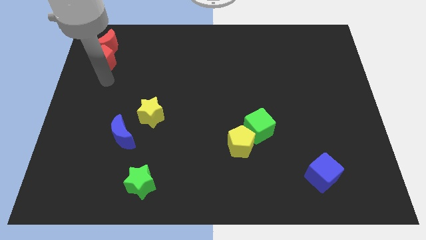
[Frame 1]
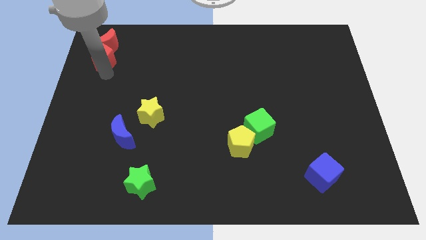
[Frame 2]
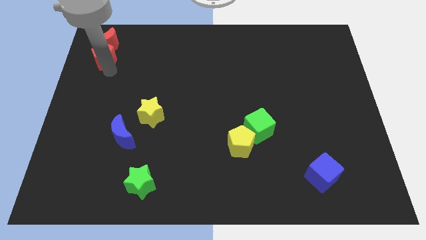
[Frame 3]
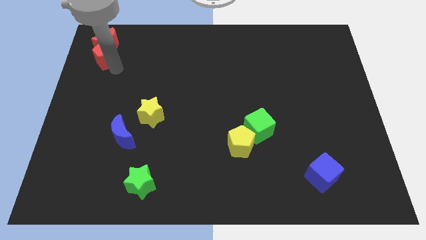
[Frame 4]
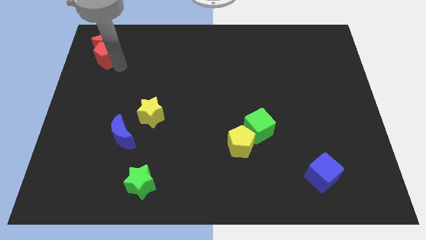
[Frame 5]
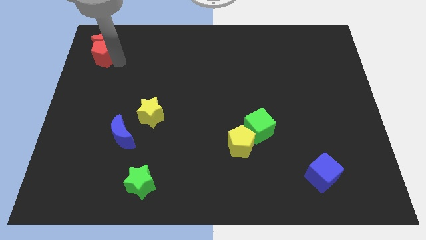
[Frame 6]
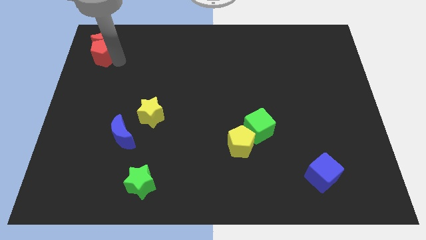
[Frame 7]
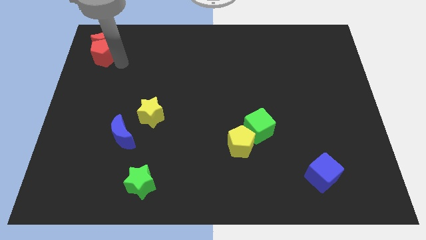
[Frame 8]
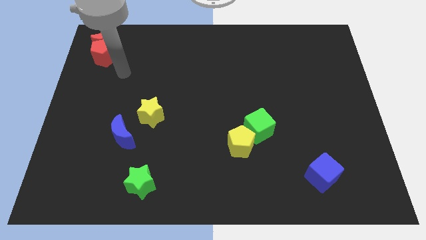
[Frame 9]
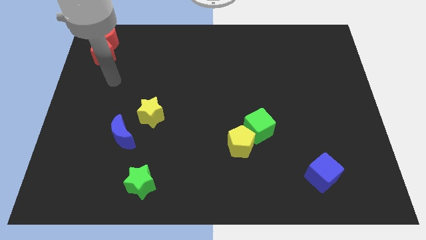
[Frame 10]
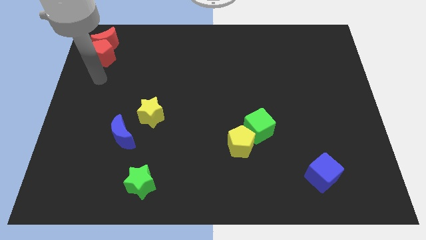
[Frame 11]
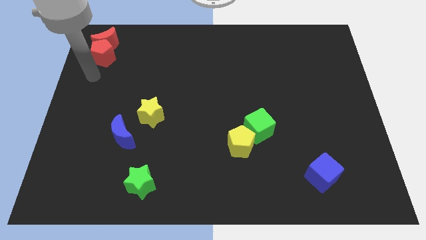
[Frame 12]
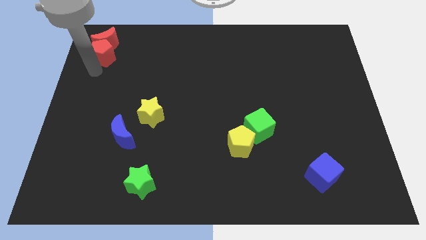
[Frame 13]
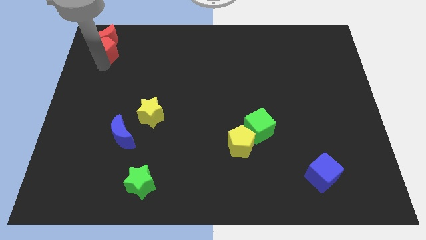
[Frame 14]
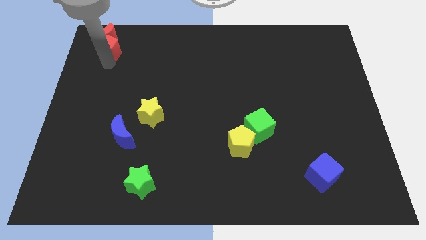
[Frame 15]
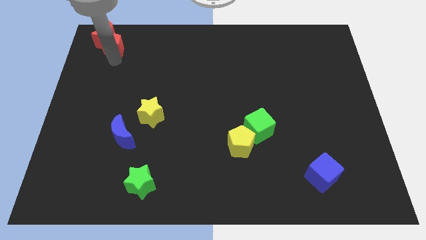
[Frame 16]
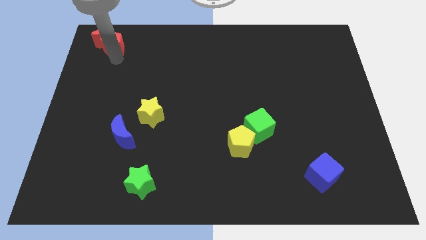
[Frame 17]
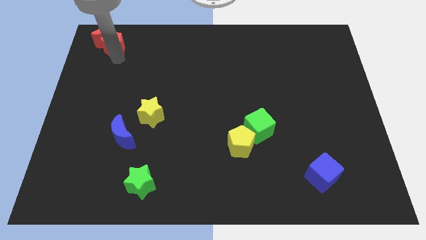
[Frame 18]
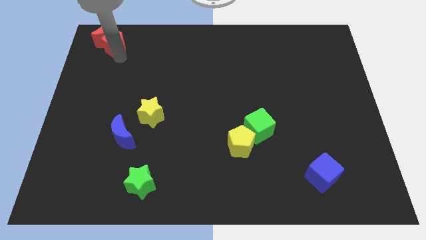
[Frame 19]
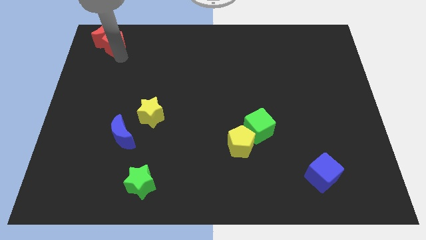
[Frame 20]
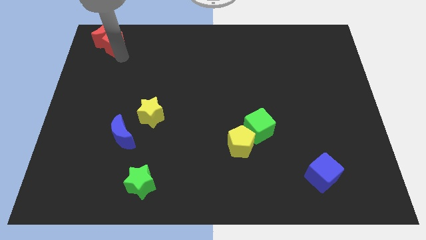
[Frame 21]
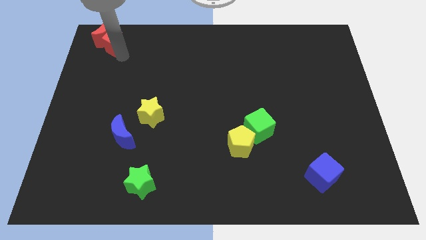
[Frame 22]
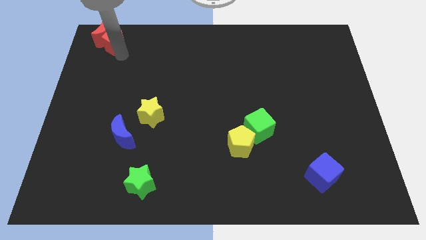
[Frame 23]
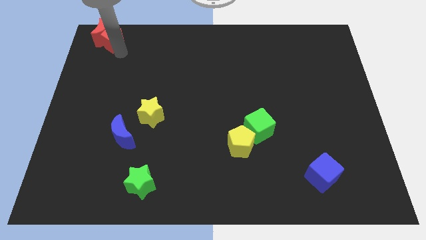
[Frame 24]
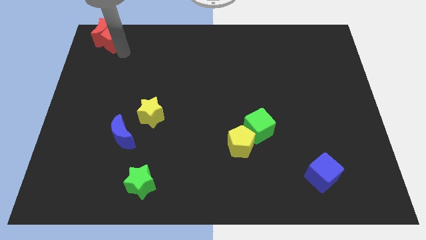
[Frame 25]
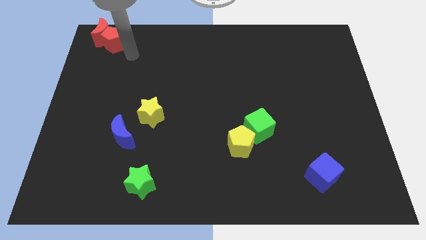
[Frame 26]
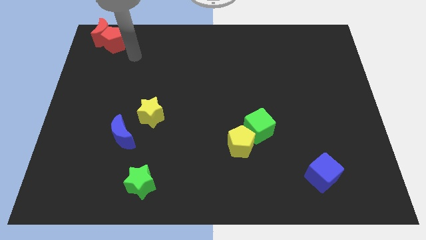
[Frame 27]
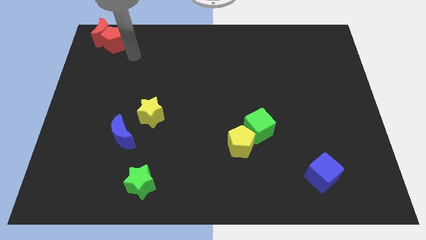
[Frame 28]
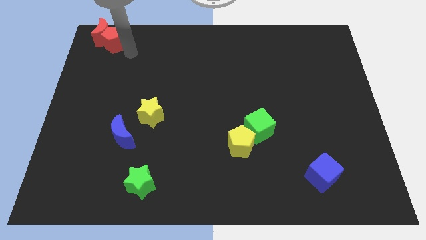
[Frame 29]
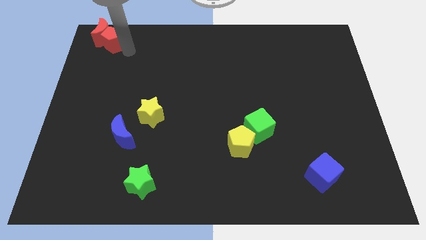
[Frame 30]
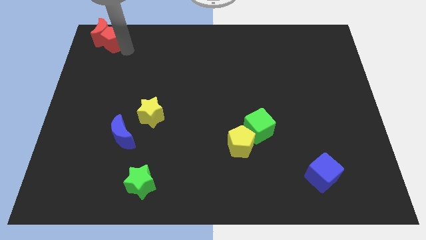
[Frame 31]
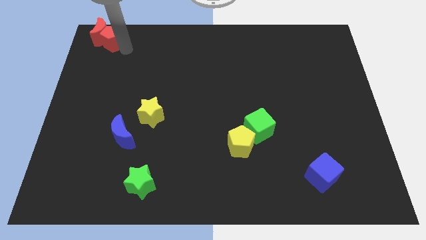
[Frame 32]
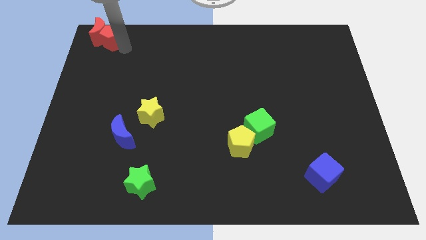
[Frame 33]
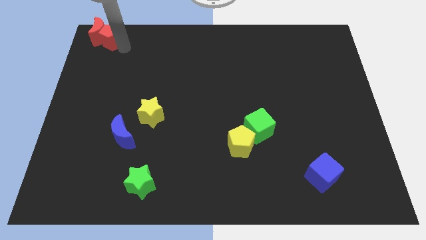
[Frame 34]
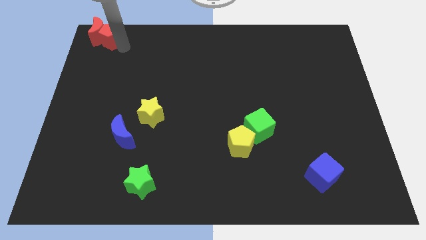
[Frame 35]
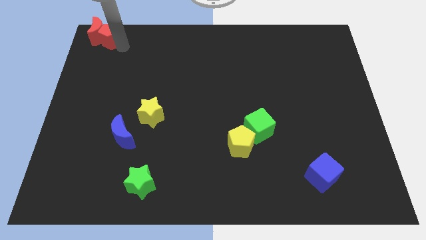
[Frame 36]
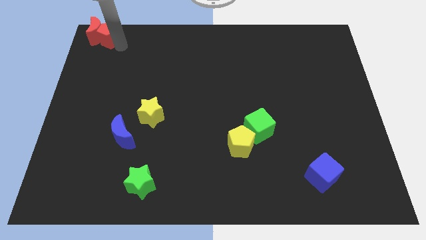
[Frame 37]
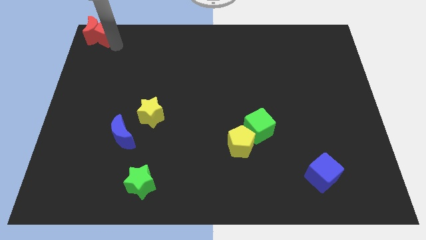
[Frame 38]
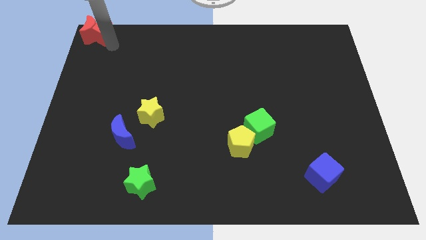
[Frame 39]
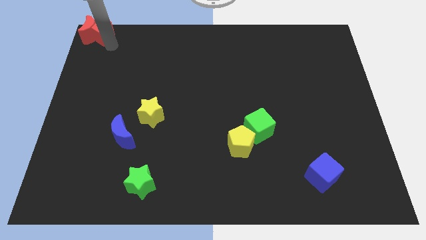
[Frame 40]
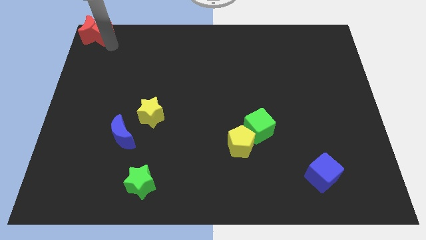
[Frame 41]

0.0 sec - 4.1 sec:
place the red blocks at the top left corner

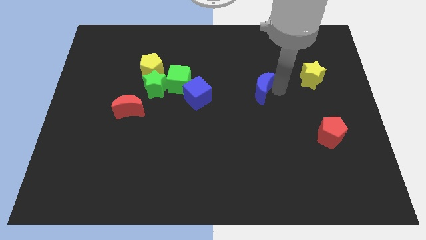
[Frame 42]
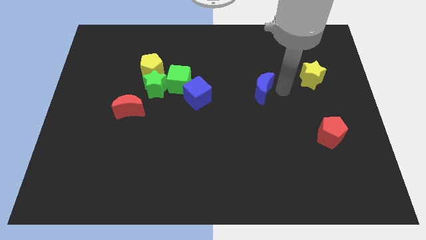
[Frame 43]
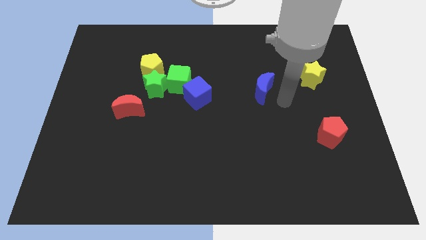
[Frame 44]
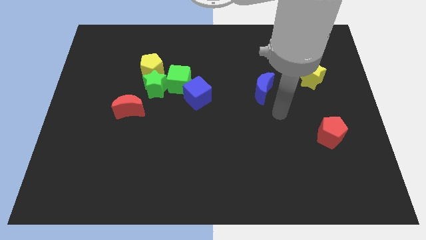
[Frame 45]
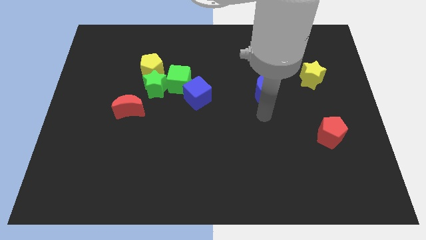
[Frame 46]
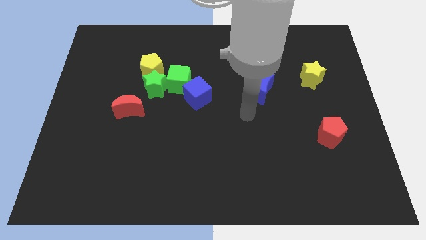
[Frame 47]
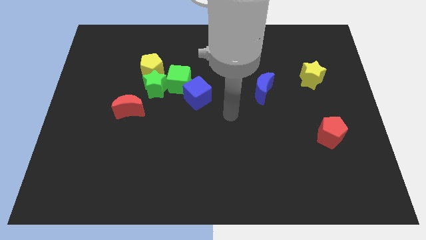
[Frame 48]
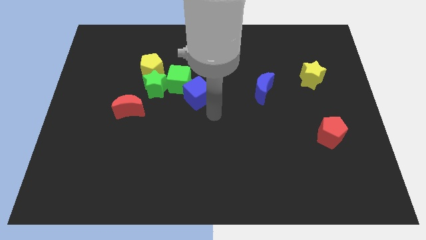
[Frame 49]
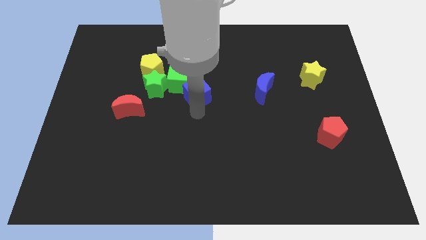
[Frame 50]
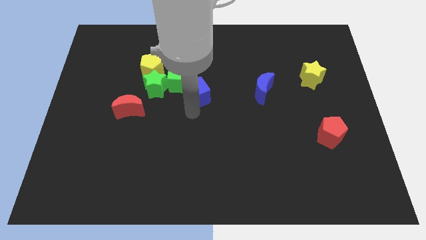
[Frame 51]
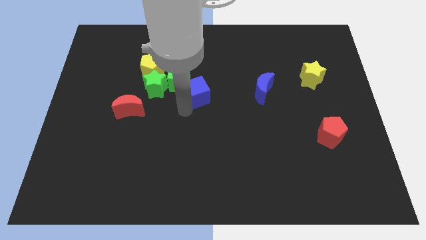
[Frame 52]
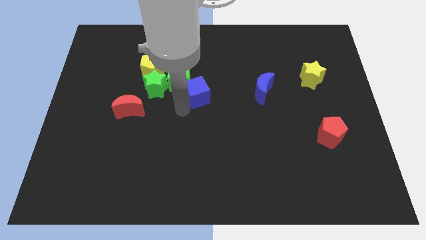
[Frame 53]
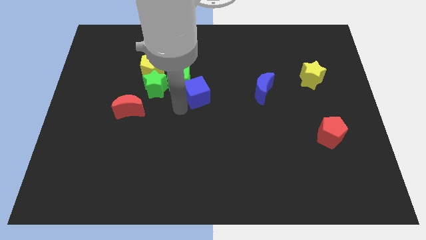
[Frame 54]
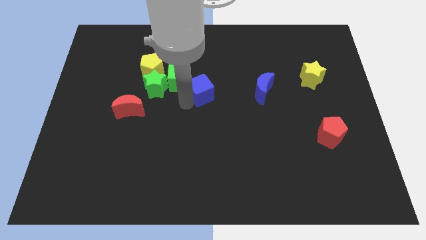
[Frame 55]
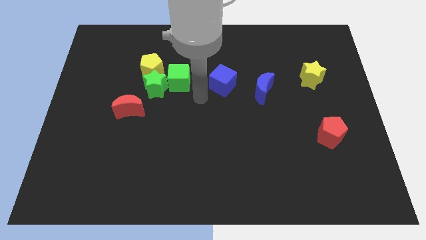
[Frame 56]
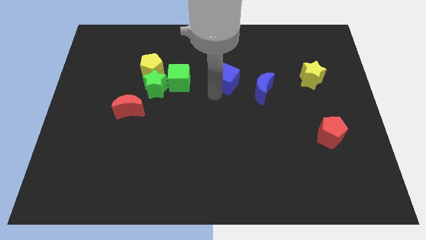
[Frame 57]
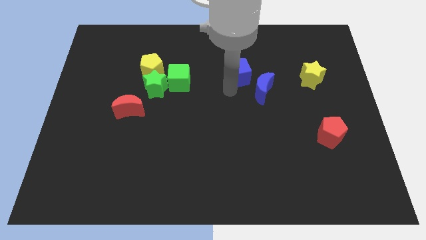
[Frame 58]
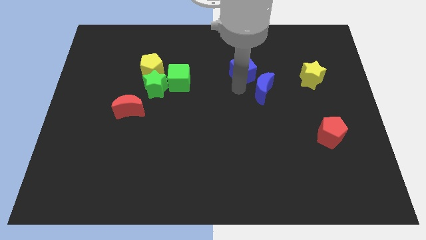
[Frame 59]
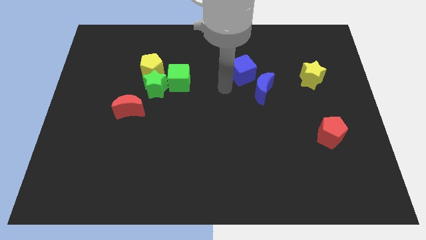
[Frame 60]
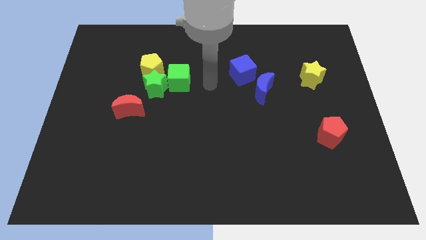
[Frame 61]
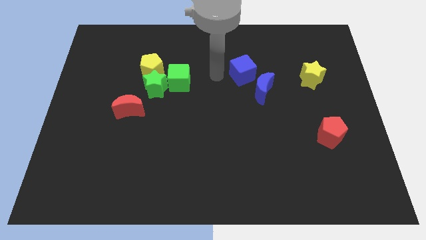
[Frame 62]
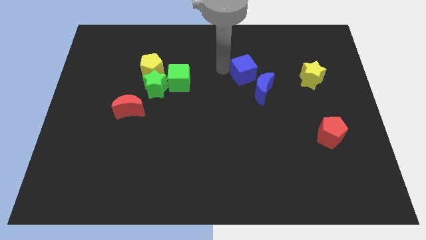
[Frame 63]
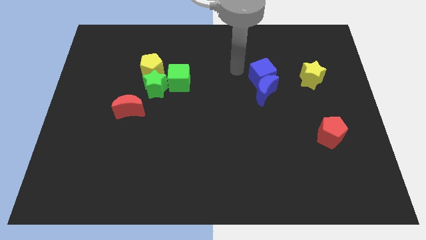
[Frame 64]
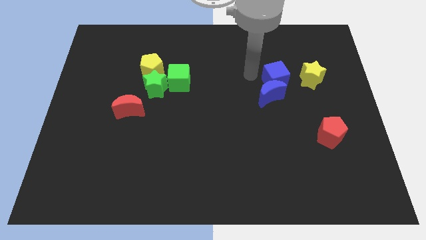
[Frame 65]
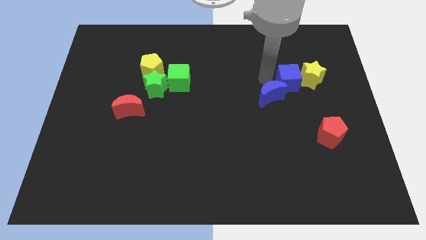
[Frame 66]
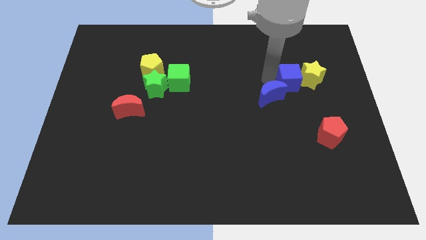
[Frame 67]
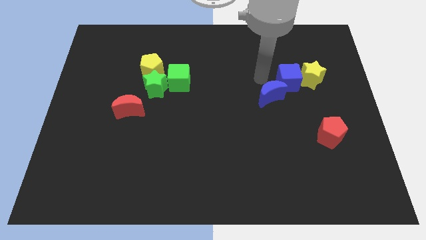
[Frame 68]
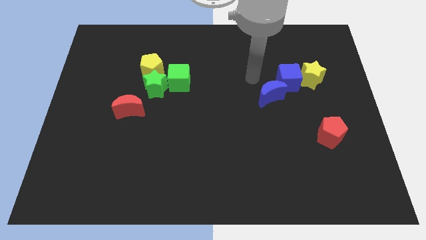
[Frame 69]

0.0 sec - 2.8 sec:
put the blue cube in between the yellow star and blue moon

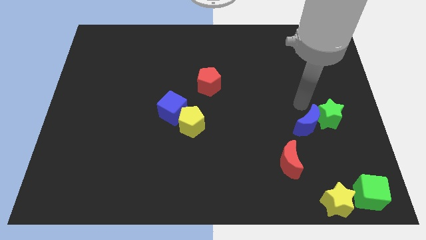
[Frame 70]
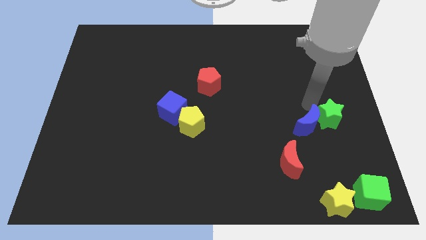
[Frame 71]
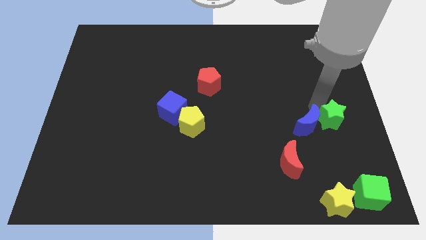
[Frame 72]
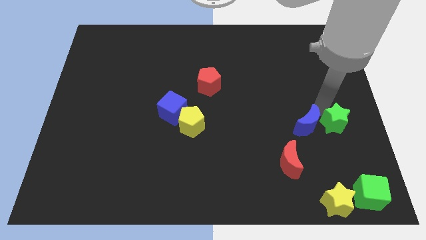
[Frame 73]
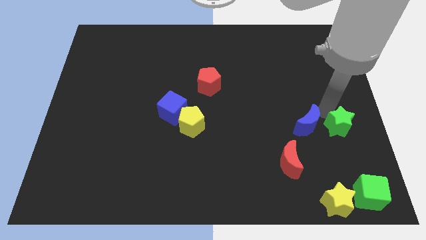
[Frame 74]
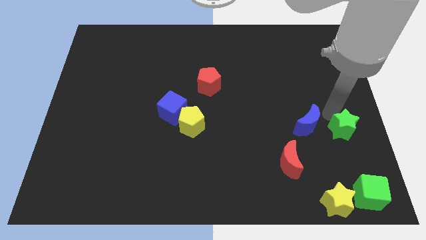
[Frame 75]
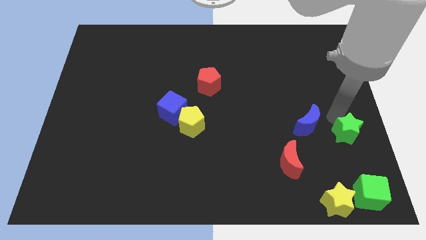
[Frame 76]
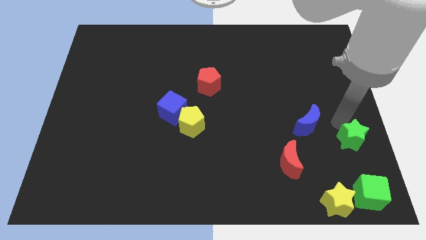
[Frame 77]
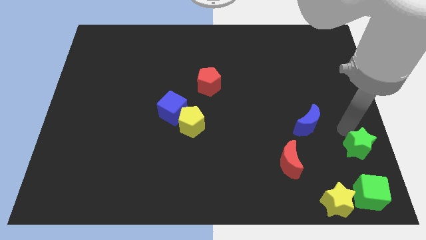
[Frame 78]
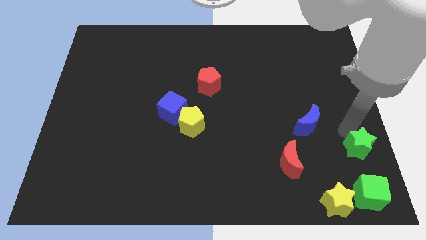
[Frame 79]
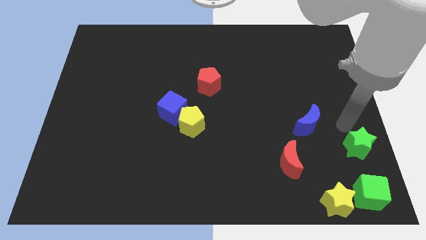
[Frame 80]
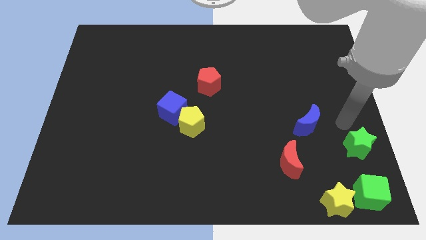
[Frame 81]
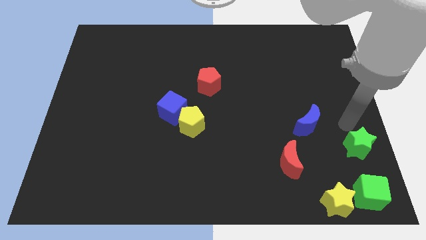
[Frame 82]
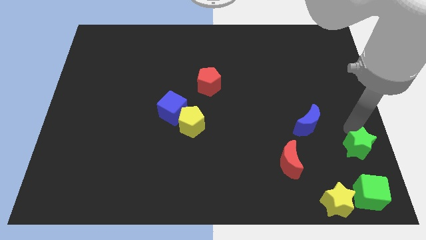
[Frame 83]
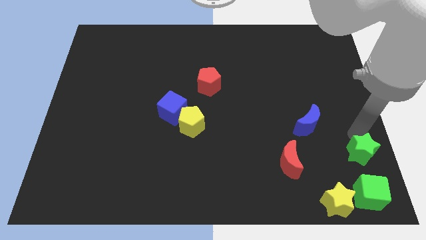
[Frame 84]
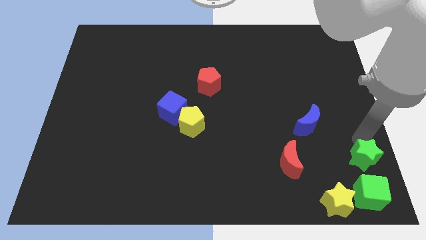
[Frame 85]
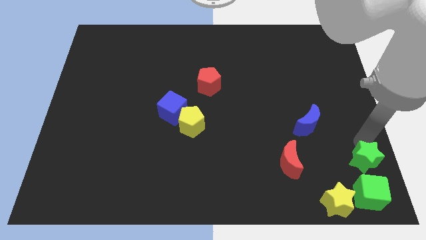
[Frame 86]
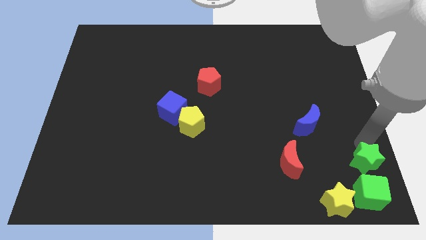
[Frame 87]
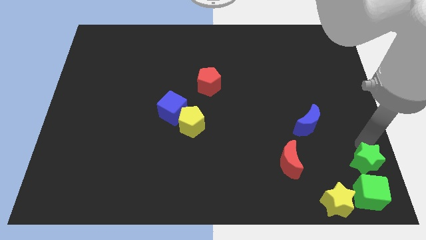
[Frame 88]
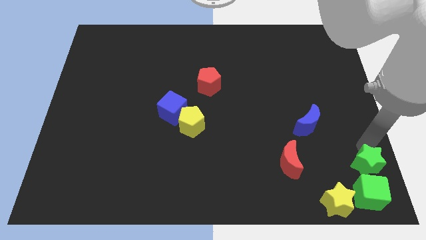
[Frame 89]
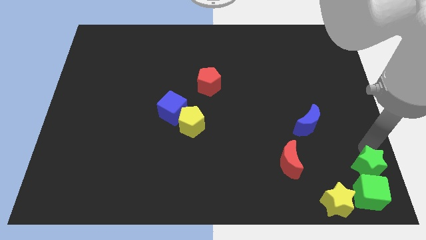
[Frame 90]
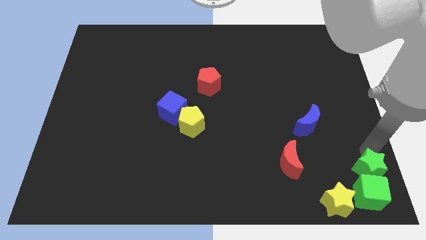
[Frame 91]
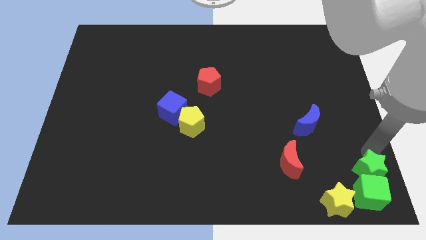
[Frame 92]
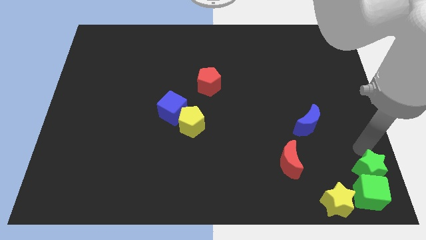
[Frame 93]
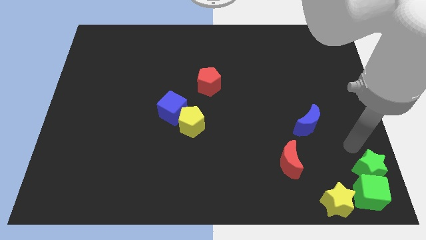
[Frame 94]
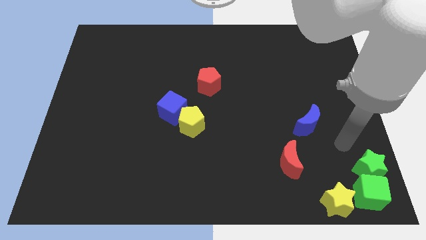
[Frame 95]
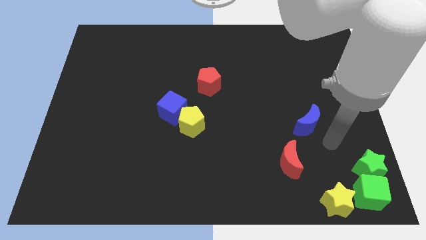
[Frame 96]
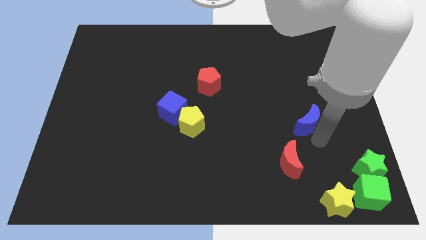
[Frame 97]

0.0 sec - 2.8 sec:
place the green star above the green cube
